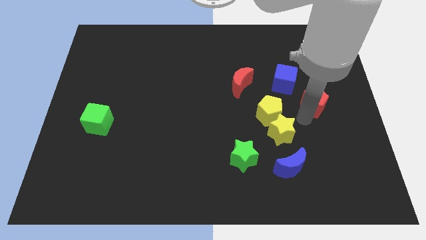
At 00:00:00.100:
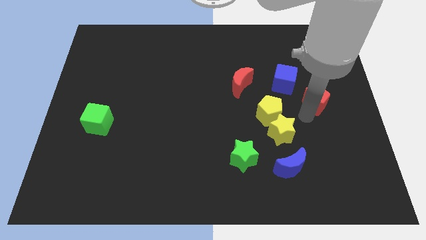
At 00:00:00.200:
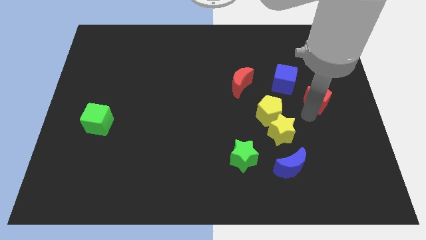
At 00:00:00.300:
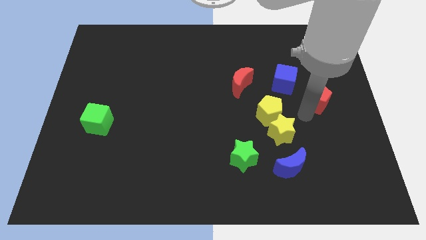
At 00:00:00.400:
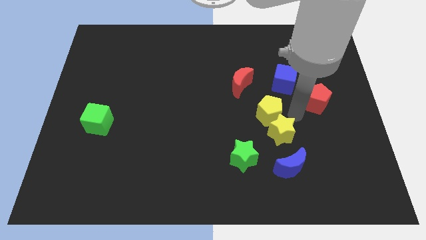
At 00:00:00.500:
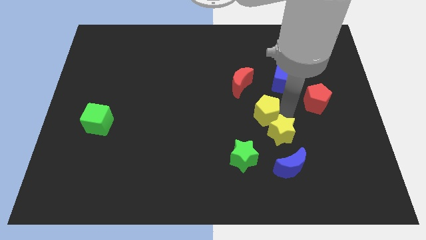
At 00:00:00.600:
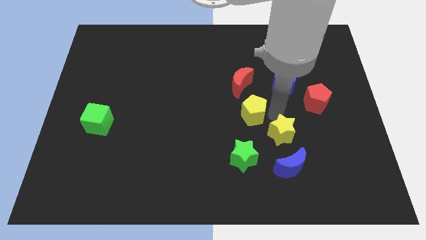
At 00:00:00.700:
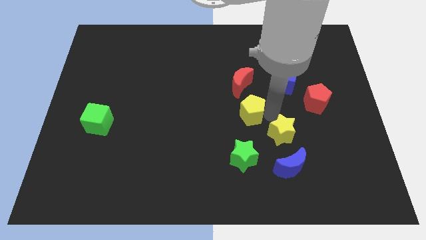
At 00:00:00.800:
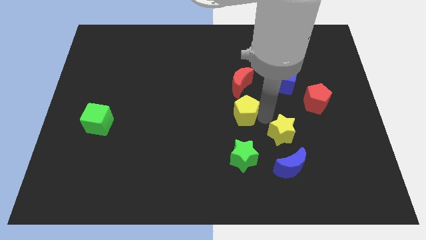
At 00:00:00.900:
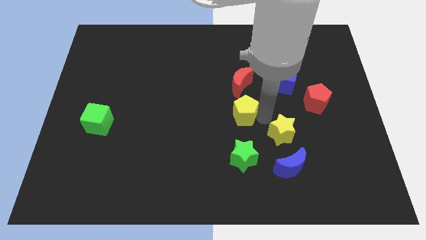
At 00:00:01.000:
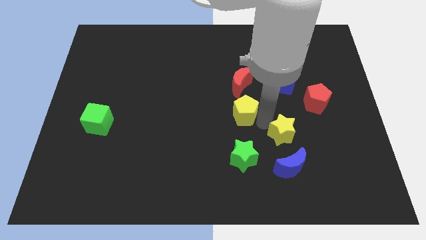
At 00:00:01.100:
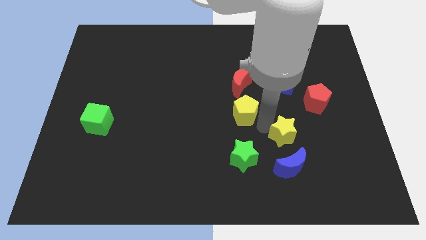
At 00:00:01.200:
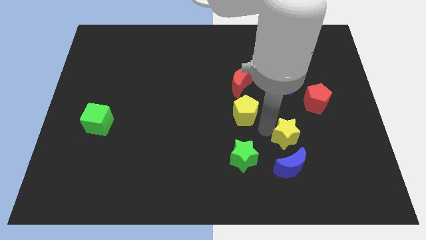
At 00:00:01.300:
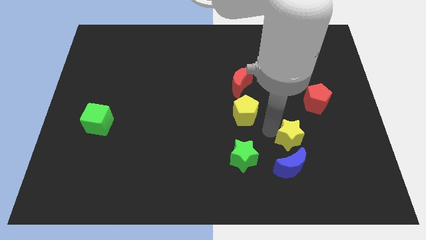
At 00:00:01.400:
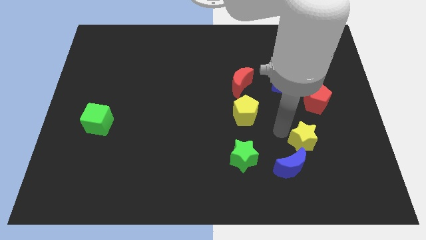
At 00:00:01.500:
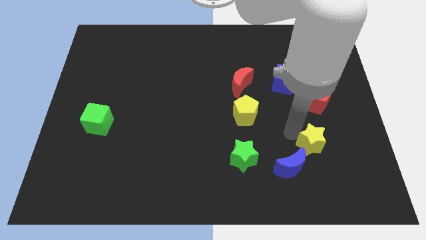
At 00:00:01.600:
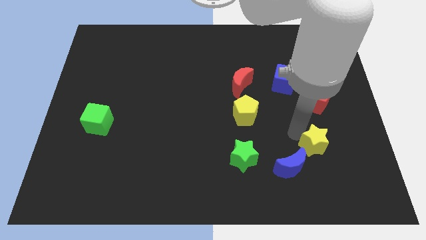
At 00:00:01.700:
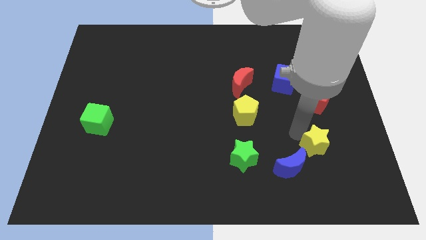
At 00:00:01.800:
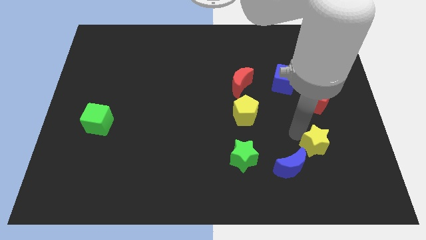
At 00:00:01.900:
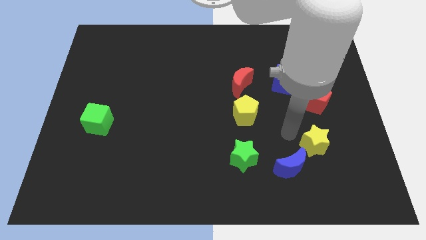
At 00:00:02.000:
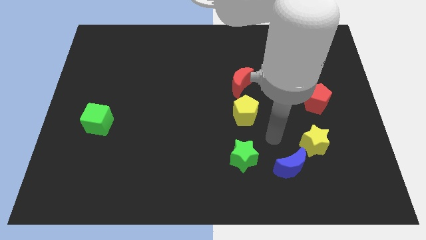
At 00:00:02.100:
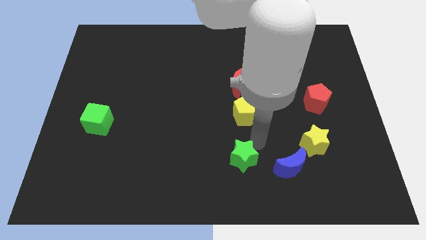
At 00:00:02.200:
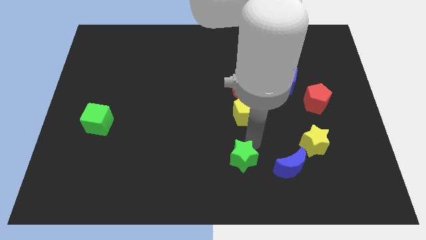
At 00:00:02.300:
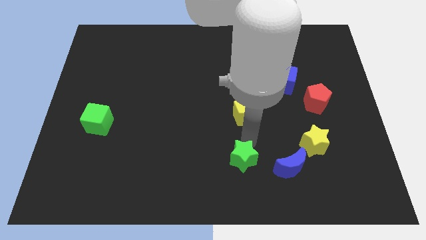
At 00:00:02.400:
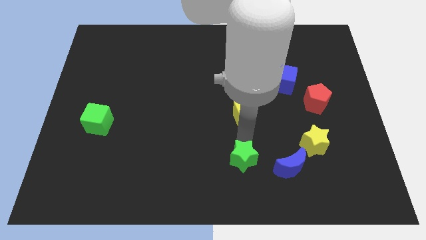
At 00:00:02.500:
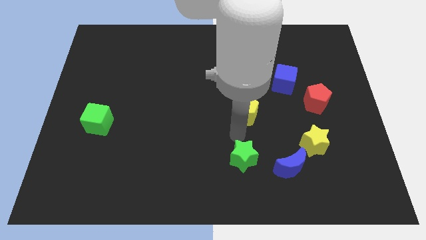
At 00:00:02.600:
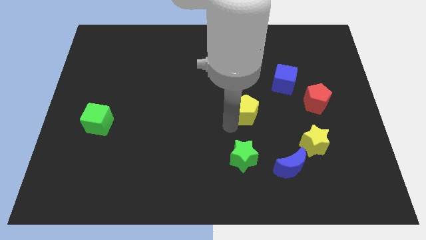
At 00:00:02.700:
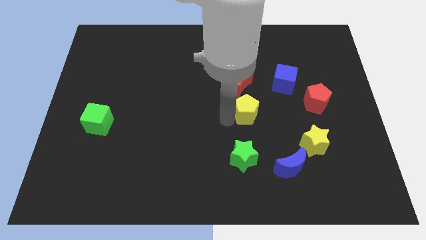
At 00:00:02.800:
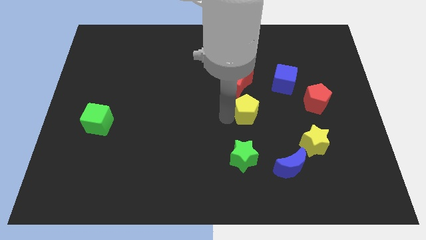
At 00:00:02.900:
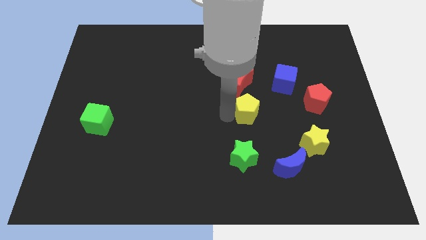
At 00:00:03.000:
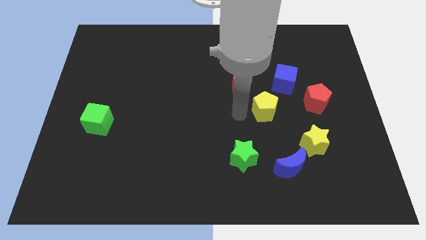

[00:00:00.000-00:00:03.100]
push the yellow blocks in opposite directions

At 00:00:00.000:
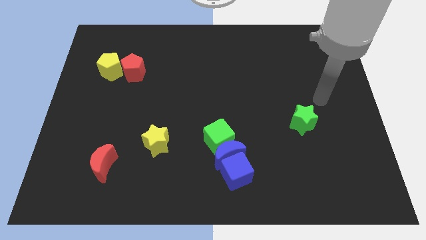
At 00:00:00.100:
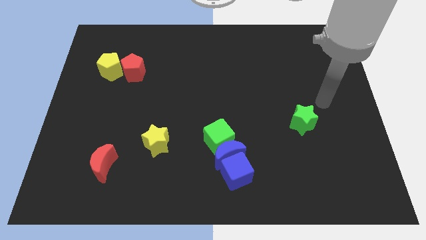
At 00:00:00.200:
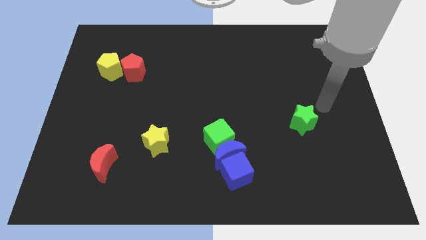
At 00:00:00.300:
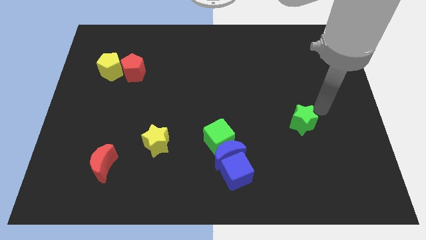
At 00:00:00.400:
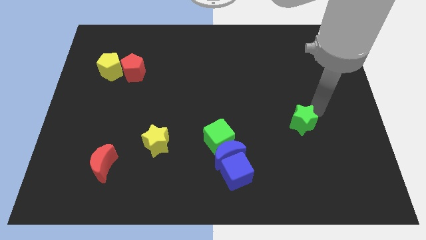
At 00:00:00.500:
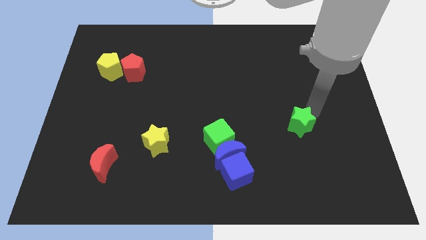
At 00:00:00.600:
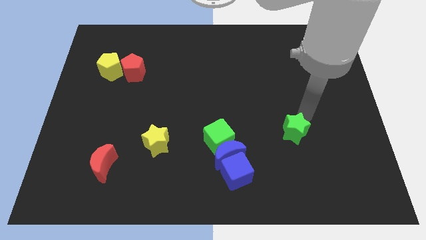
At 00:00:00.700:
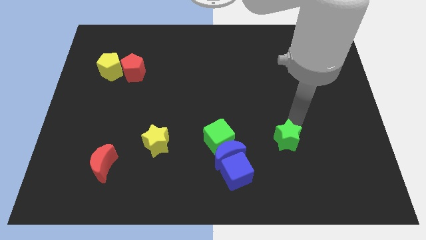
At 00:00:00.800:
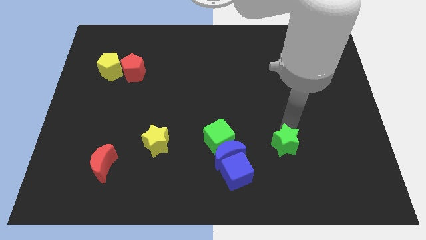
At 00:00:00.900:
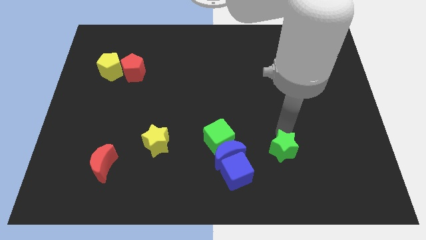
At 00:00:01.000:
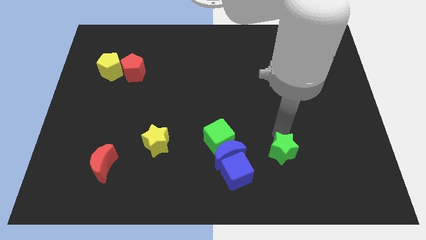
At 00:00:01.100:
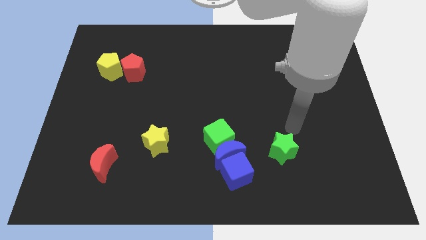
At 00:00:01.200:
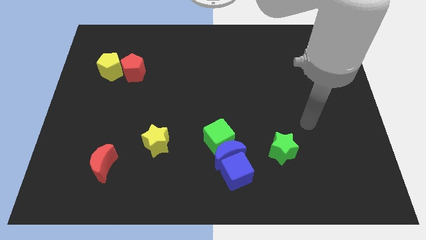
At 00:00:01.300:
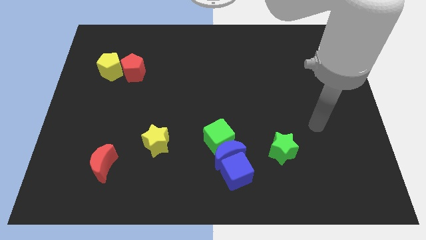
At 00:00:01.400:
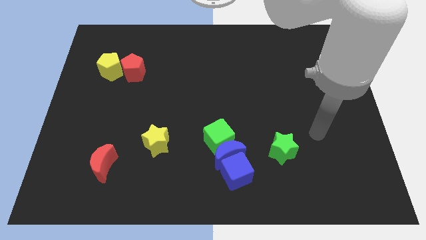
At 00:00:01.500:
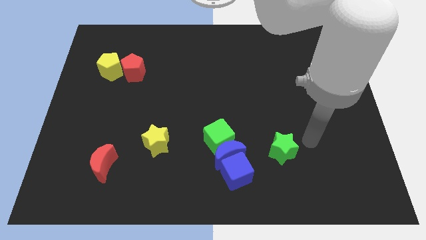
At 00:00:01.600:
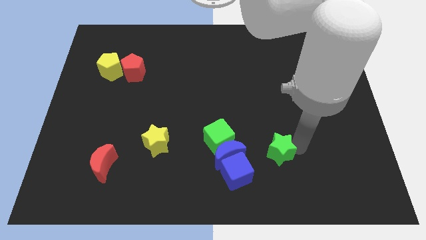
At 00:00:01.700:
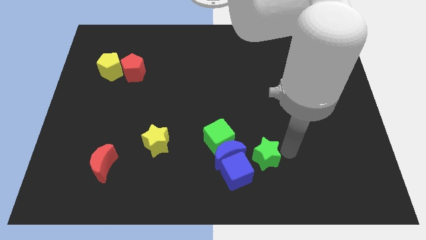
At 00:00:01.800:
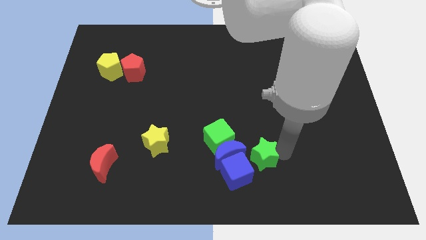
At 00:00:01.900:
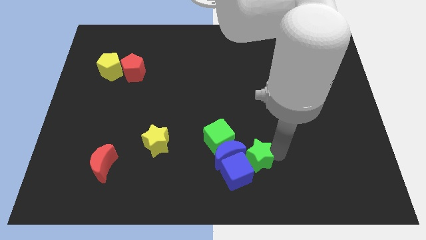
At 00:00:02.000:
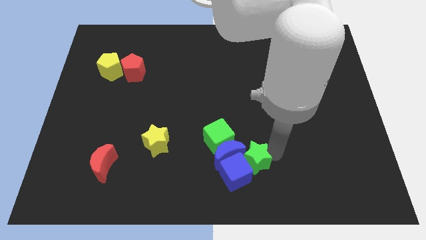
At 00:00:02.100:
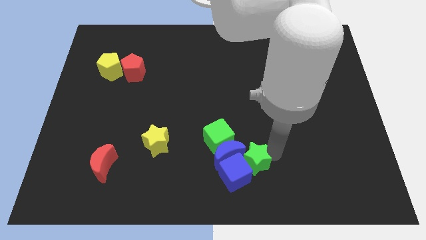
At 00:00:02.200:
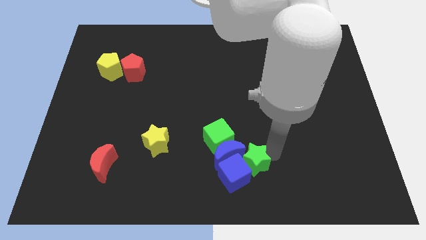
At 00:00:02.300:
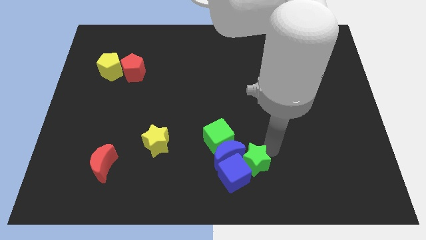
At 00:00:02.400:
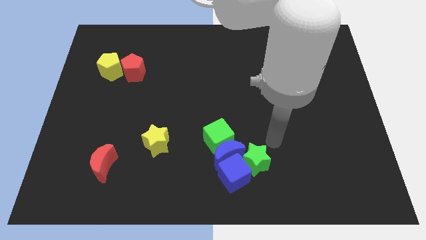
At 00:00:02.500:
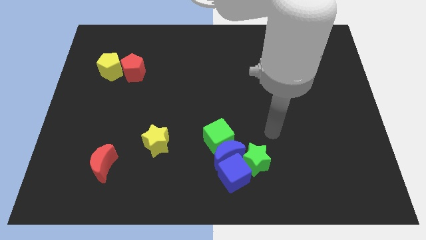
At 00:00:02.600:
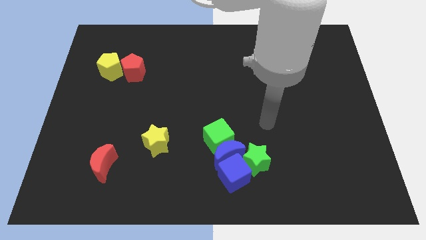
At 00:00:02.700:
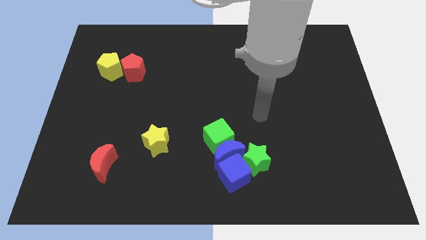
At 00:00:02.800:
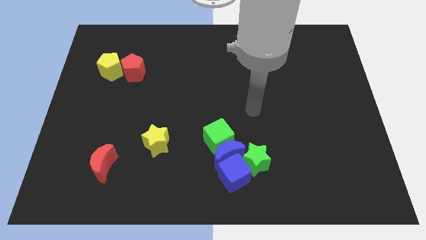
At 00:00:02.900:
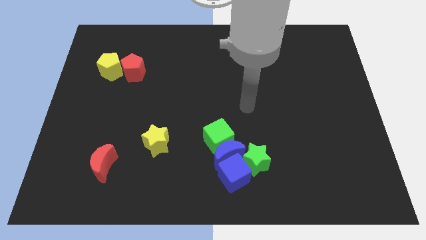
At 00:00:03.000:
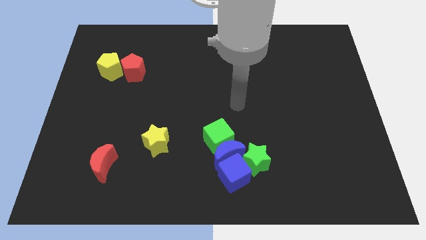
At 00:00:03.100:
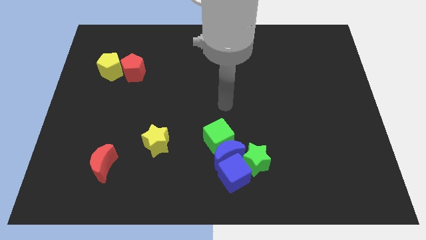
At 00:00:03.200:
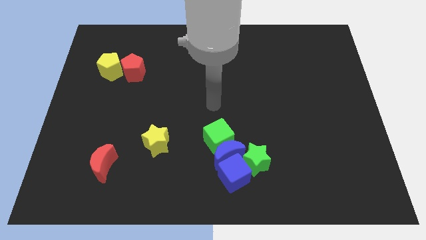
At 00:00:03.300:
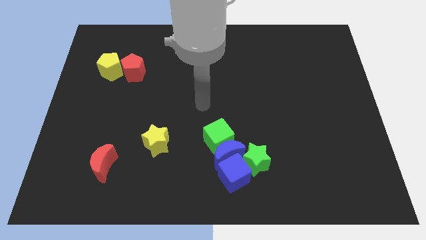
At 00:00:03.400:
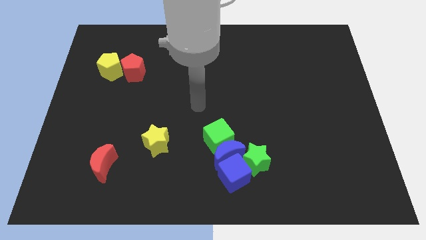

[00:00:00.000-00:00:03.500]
push the green star to the right of the blue cube

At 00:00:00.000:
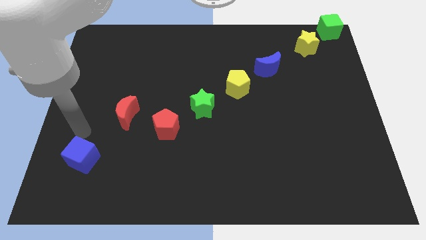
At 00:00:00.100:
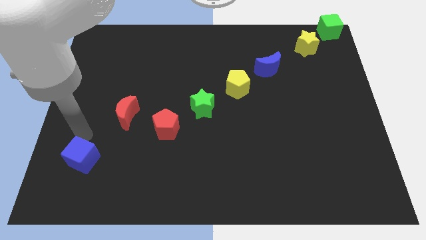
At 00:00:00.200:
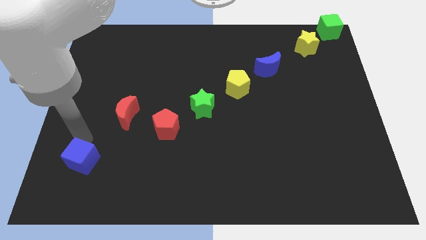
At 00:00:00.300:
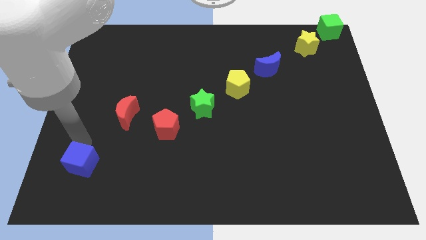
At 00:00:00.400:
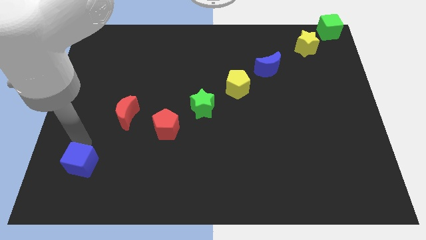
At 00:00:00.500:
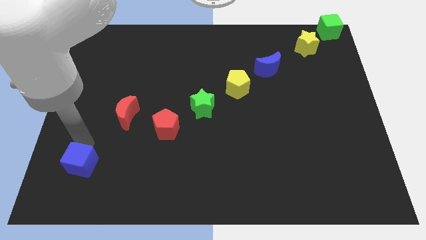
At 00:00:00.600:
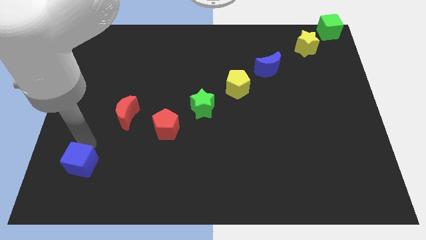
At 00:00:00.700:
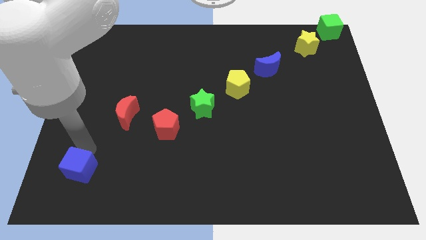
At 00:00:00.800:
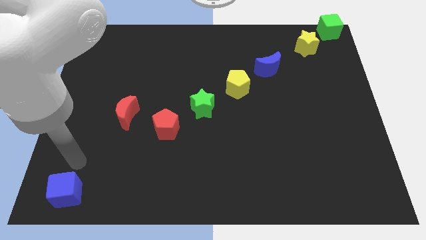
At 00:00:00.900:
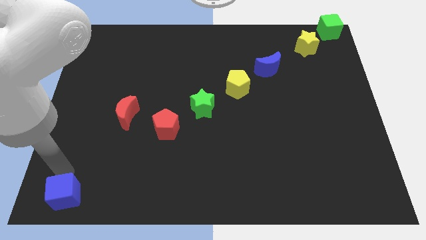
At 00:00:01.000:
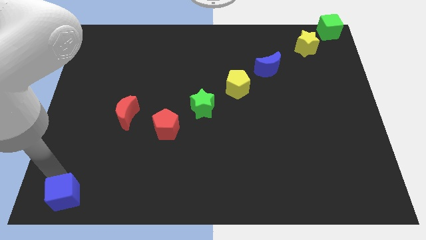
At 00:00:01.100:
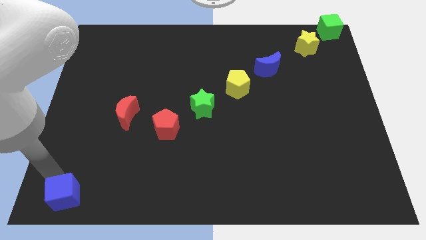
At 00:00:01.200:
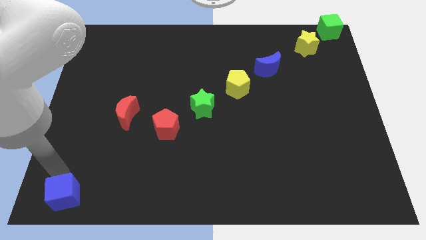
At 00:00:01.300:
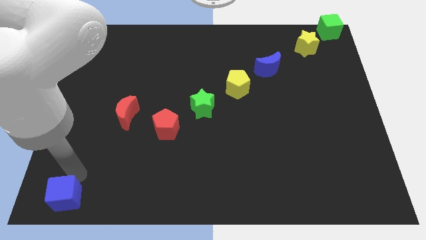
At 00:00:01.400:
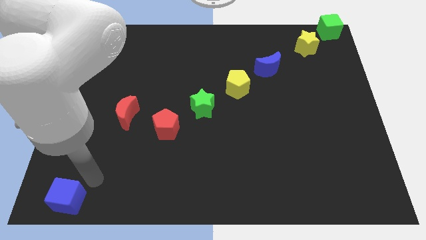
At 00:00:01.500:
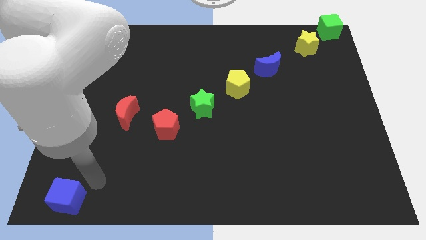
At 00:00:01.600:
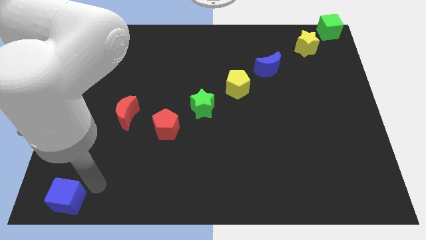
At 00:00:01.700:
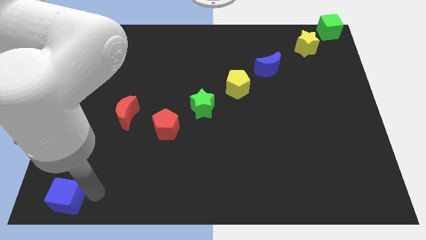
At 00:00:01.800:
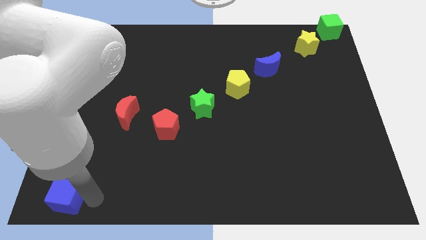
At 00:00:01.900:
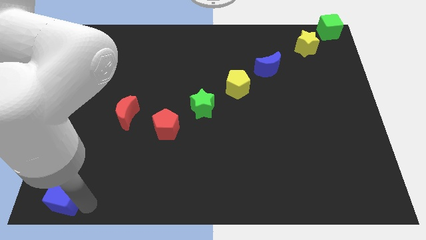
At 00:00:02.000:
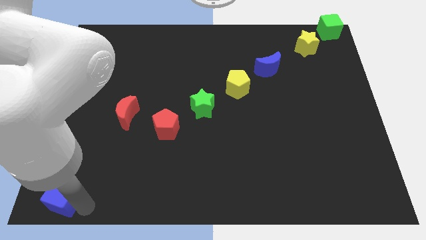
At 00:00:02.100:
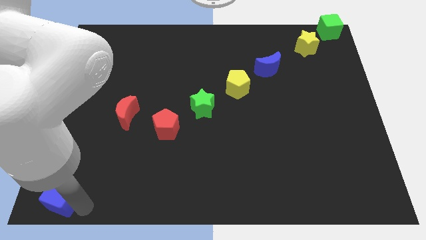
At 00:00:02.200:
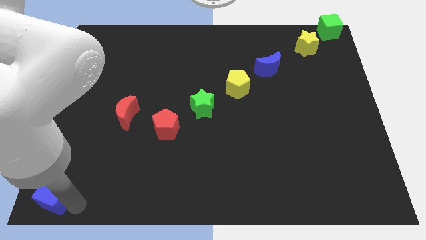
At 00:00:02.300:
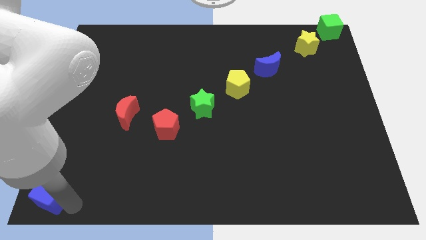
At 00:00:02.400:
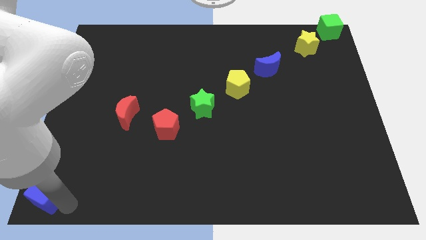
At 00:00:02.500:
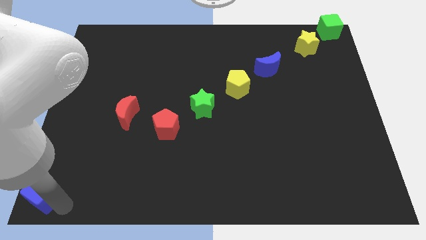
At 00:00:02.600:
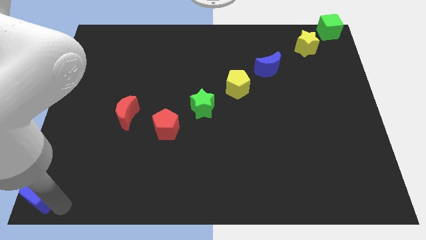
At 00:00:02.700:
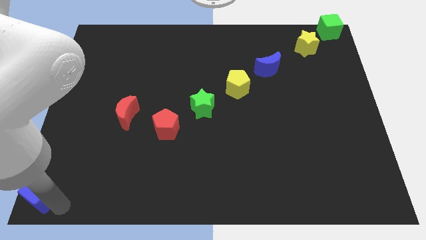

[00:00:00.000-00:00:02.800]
place the blue cube at the bottom left of the board
